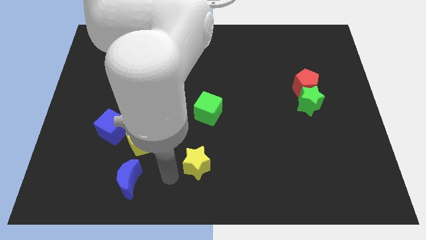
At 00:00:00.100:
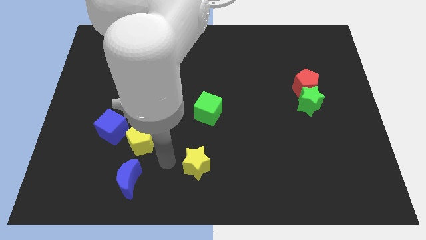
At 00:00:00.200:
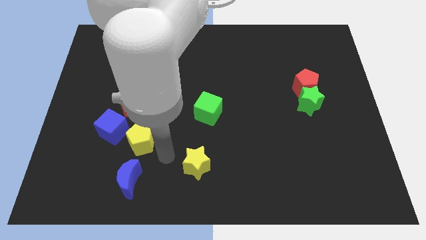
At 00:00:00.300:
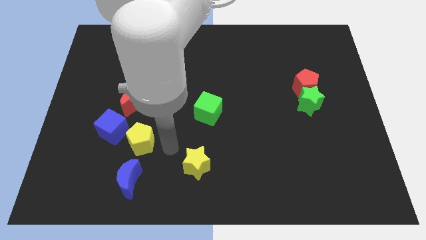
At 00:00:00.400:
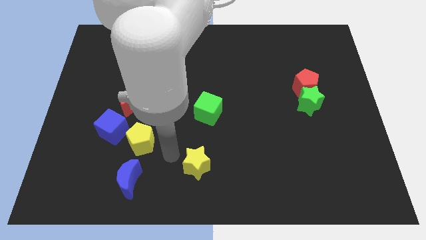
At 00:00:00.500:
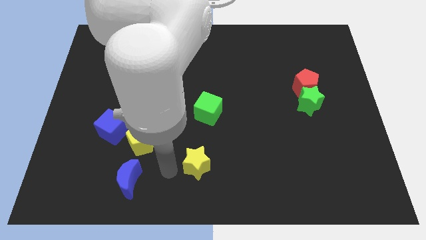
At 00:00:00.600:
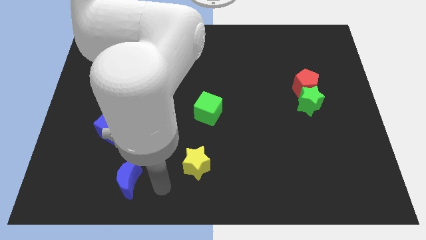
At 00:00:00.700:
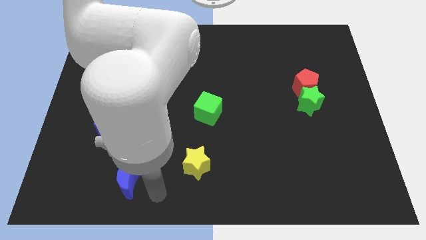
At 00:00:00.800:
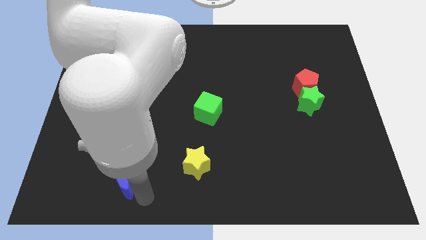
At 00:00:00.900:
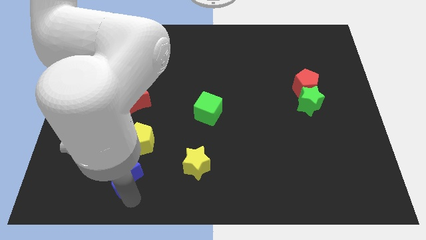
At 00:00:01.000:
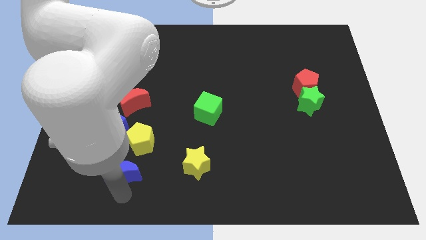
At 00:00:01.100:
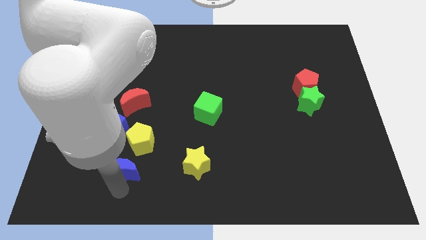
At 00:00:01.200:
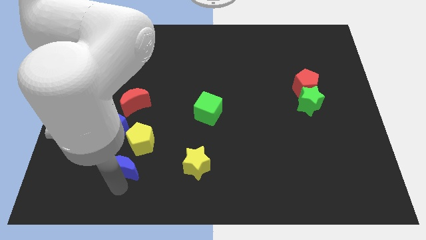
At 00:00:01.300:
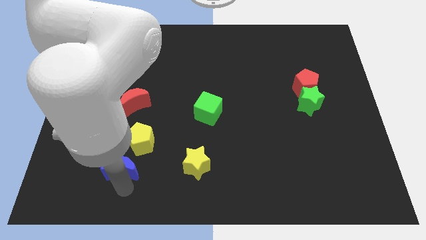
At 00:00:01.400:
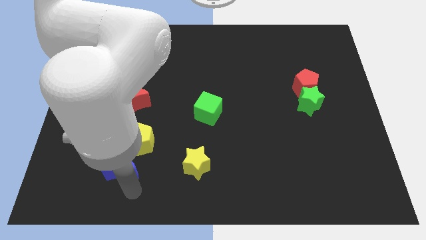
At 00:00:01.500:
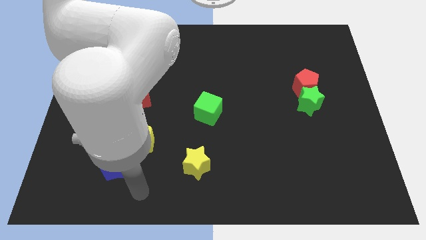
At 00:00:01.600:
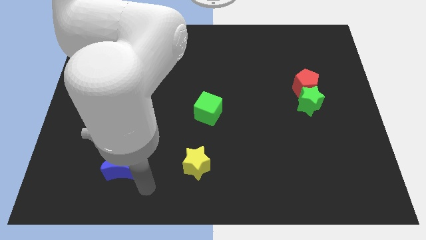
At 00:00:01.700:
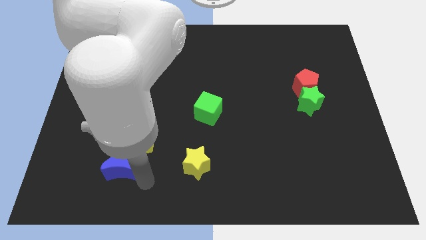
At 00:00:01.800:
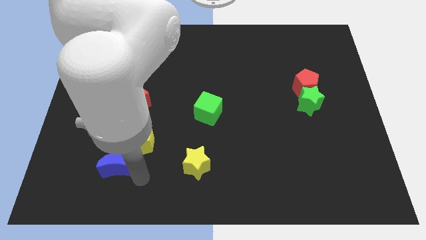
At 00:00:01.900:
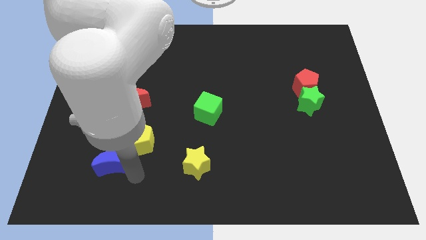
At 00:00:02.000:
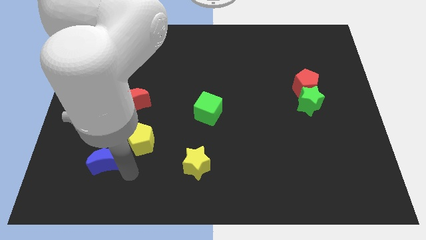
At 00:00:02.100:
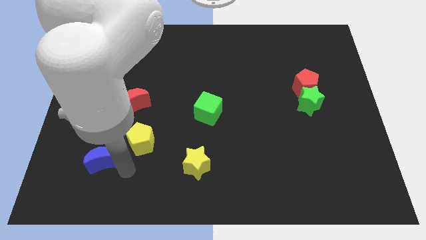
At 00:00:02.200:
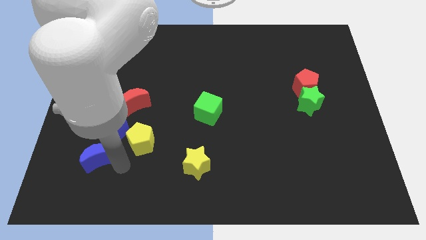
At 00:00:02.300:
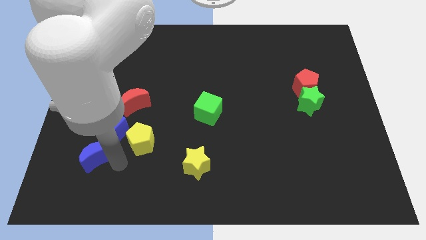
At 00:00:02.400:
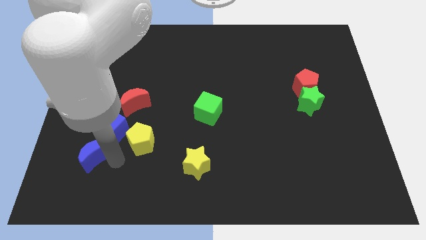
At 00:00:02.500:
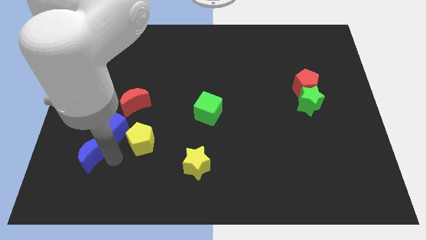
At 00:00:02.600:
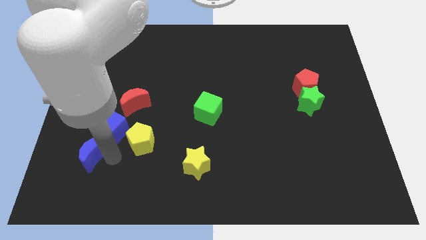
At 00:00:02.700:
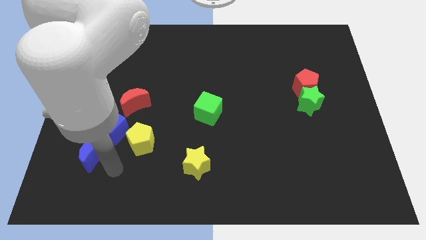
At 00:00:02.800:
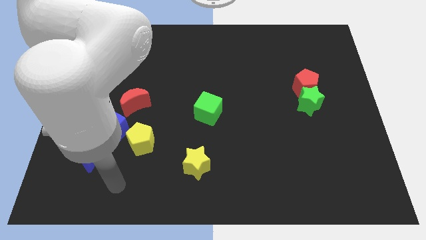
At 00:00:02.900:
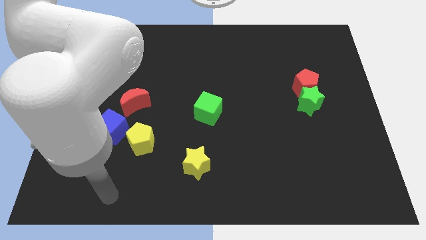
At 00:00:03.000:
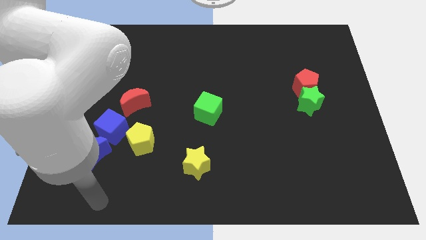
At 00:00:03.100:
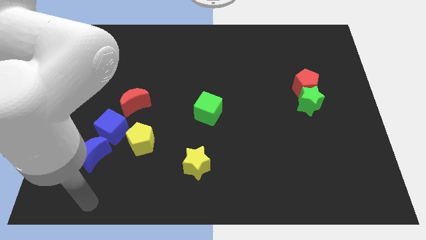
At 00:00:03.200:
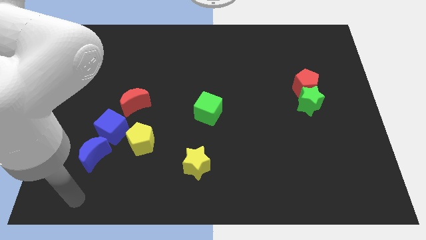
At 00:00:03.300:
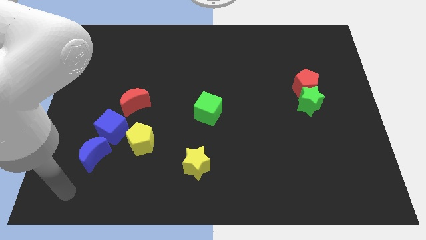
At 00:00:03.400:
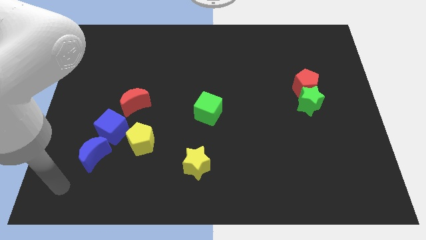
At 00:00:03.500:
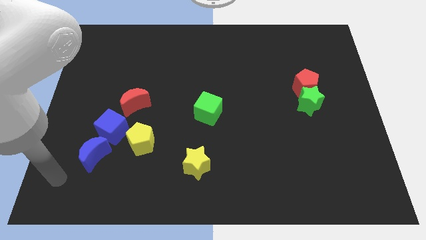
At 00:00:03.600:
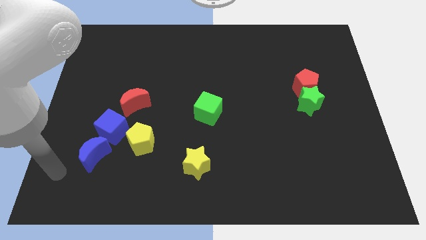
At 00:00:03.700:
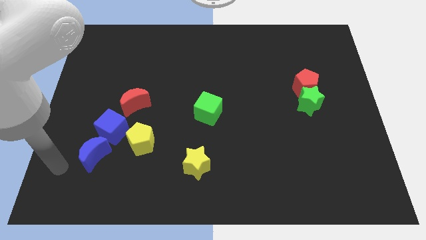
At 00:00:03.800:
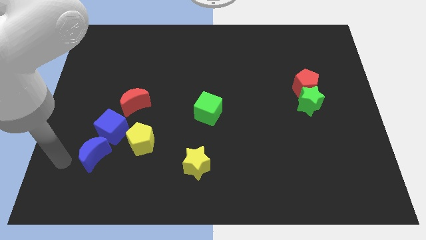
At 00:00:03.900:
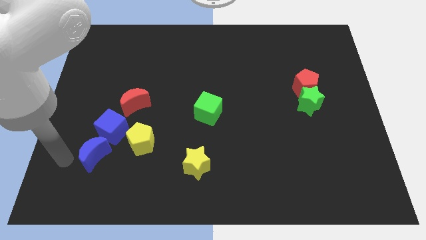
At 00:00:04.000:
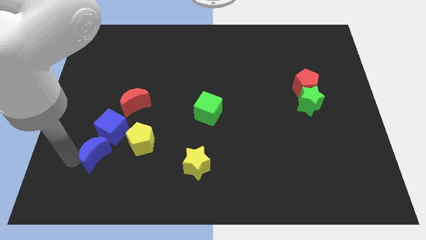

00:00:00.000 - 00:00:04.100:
push the blue crescent into the blue cube

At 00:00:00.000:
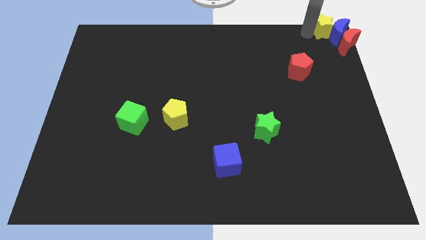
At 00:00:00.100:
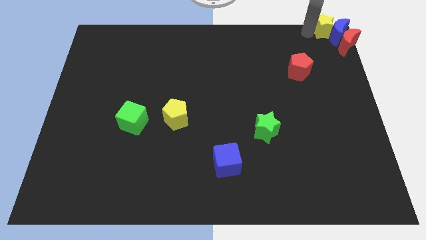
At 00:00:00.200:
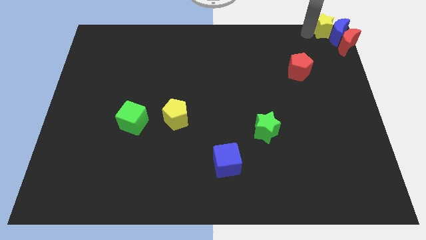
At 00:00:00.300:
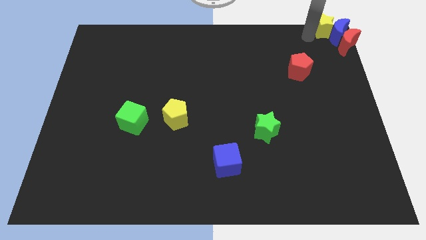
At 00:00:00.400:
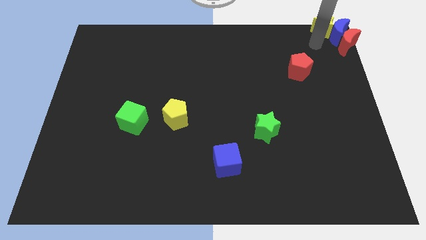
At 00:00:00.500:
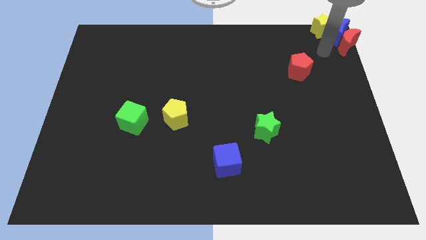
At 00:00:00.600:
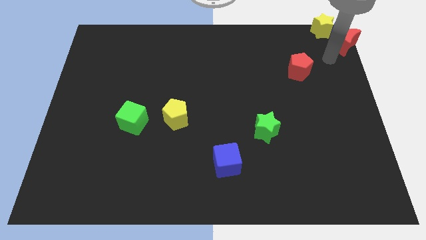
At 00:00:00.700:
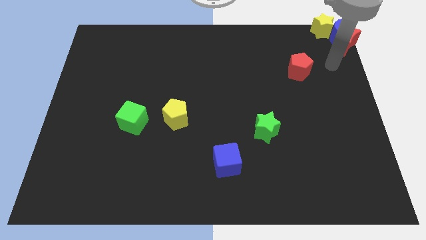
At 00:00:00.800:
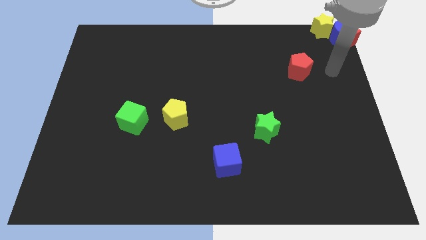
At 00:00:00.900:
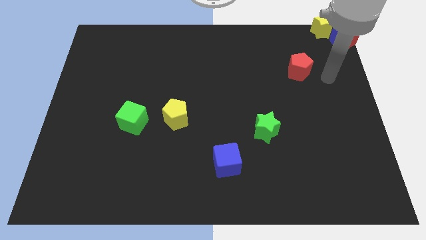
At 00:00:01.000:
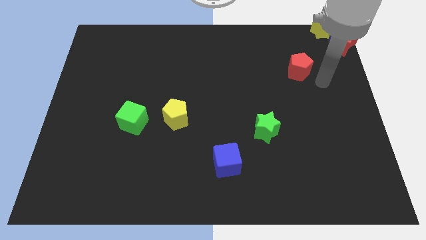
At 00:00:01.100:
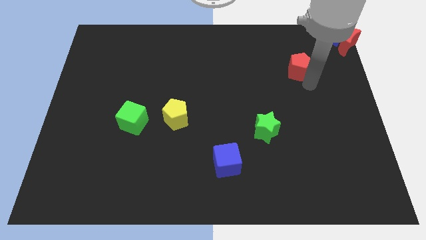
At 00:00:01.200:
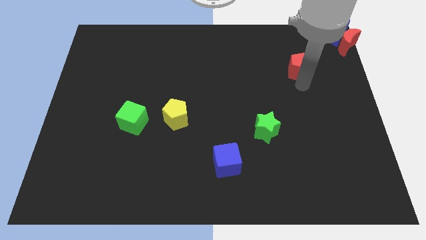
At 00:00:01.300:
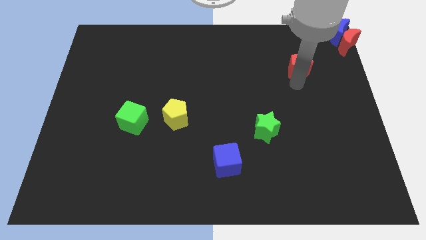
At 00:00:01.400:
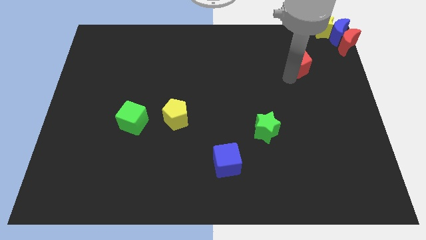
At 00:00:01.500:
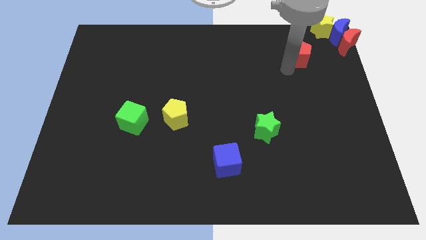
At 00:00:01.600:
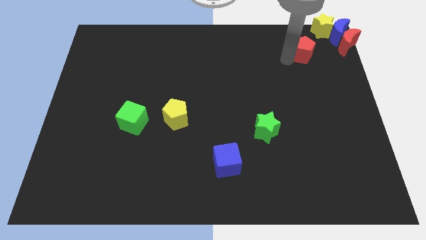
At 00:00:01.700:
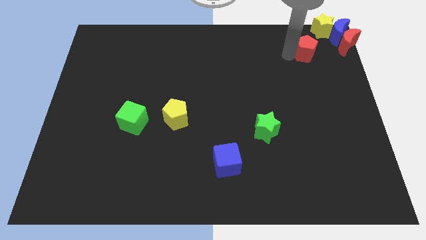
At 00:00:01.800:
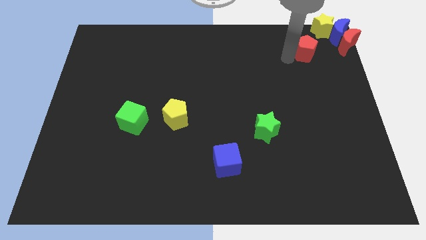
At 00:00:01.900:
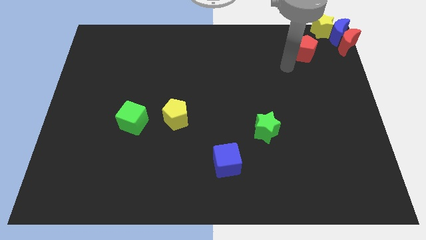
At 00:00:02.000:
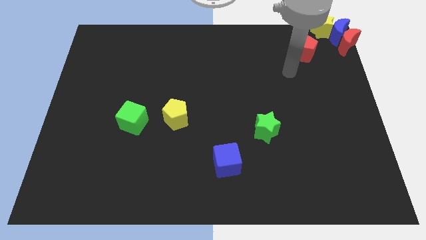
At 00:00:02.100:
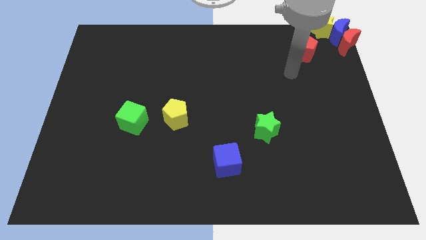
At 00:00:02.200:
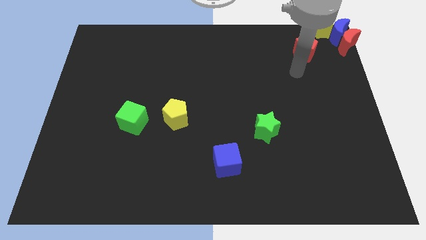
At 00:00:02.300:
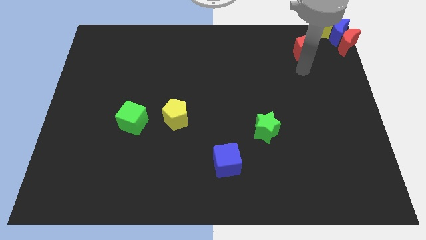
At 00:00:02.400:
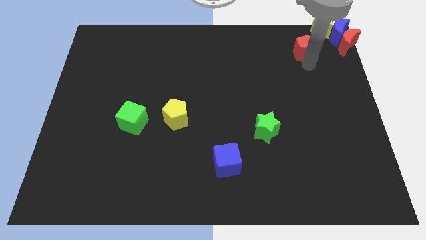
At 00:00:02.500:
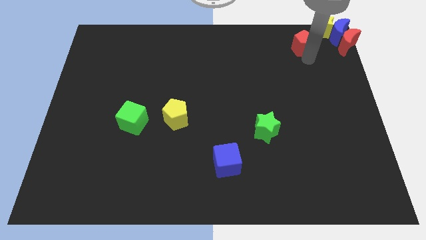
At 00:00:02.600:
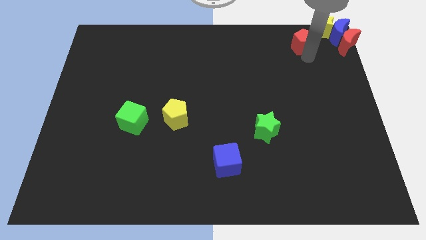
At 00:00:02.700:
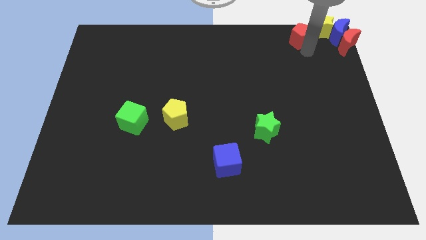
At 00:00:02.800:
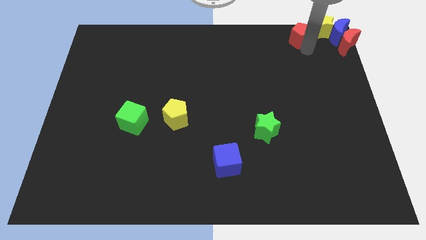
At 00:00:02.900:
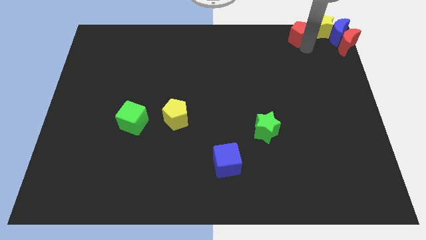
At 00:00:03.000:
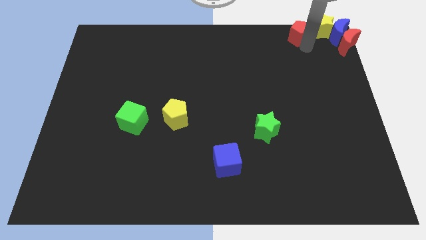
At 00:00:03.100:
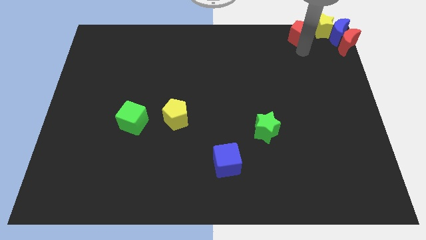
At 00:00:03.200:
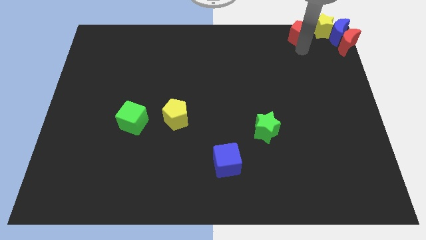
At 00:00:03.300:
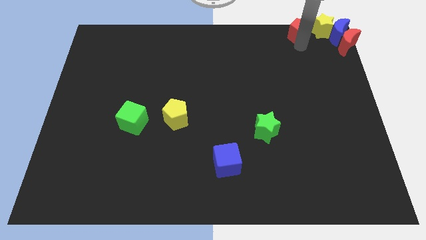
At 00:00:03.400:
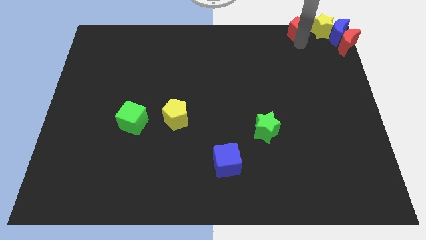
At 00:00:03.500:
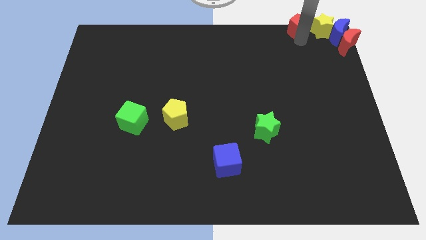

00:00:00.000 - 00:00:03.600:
place the red pentagon left to the yellow star

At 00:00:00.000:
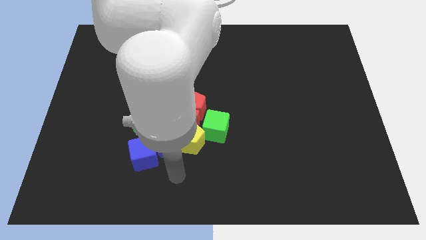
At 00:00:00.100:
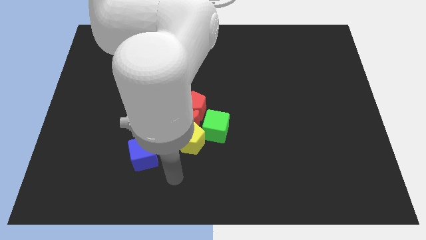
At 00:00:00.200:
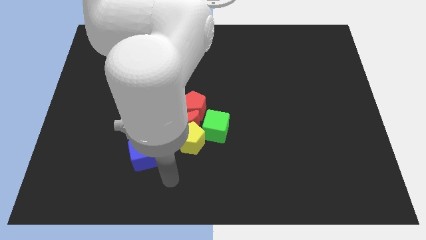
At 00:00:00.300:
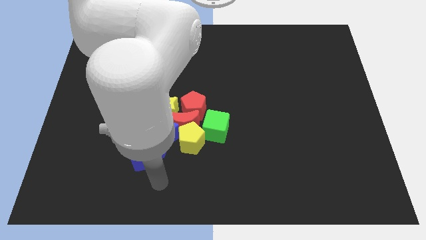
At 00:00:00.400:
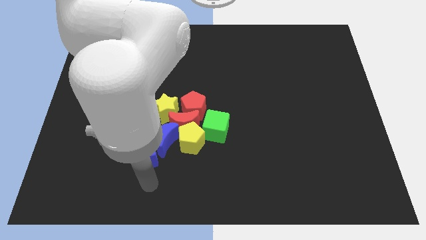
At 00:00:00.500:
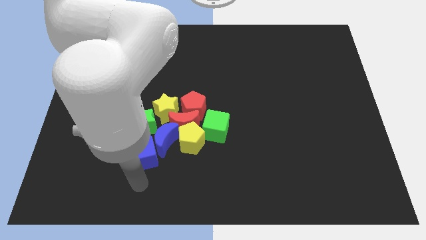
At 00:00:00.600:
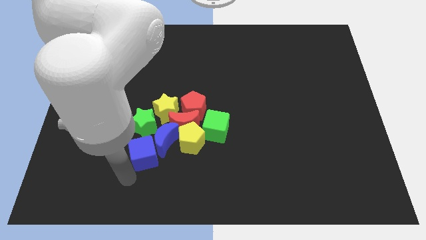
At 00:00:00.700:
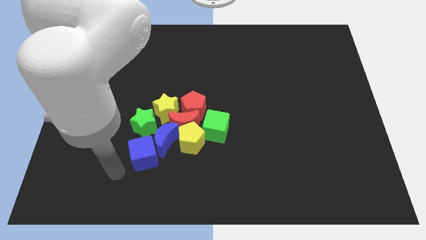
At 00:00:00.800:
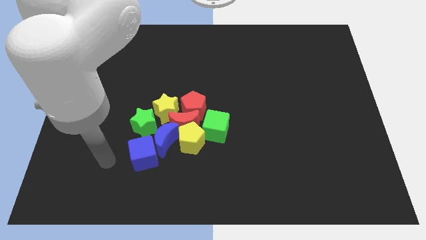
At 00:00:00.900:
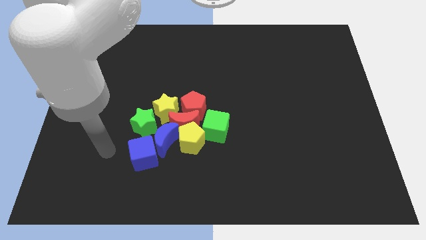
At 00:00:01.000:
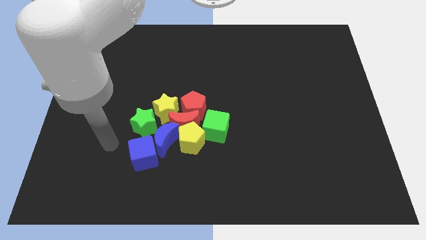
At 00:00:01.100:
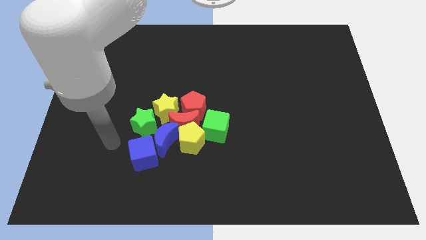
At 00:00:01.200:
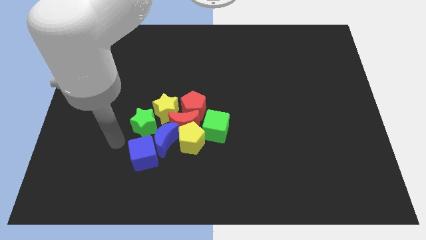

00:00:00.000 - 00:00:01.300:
move yourself away from the yellow pentagon
